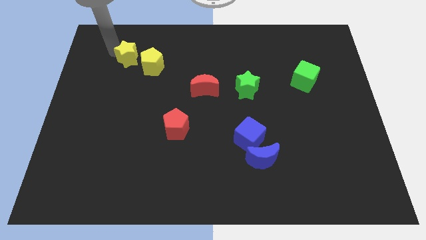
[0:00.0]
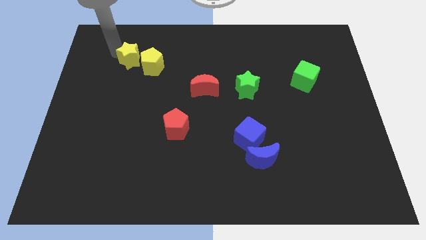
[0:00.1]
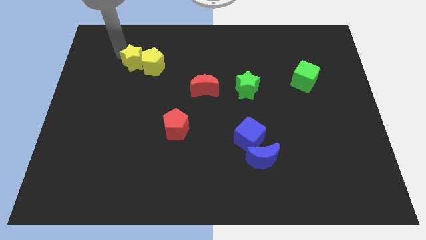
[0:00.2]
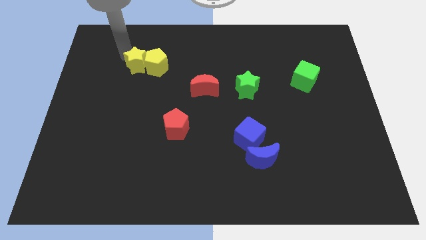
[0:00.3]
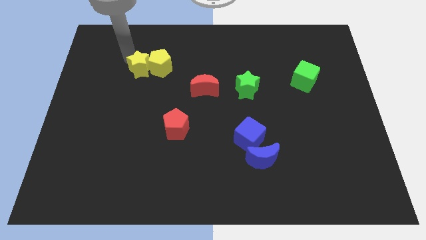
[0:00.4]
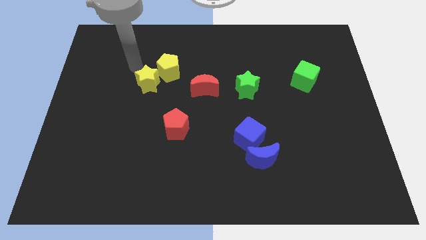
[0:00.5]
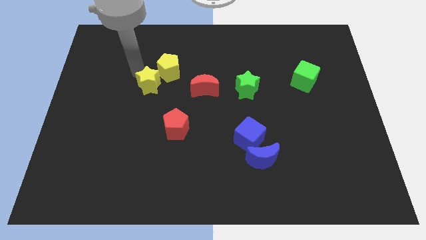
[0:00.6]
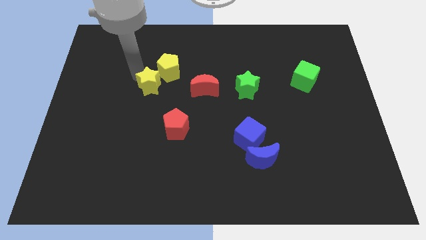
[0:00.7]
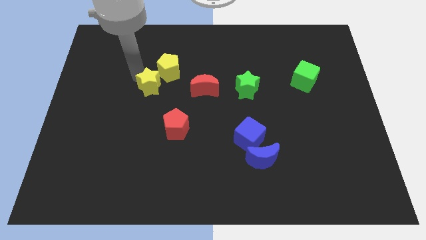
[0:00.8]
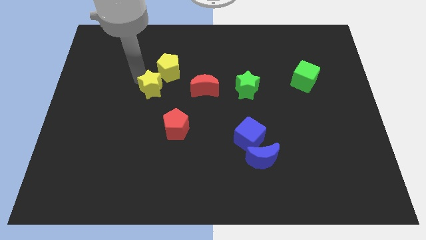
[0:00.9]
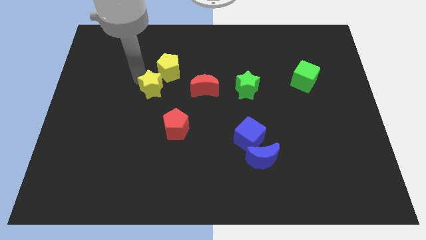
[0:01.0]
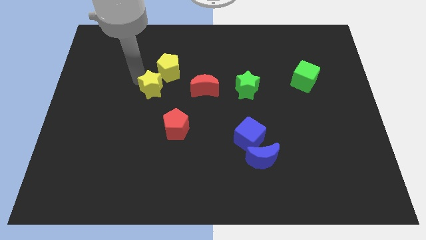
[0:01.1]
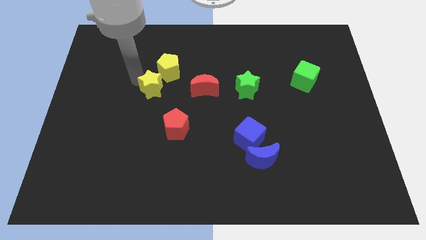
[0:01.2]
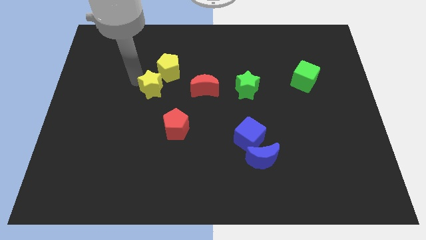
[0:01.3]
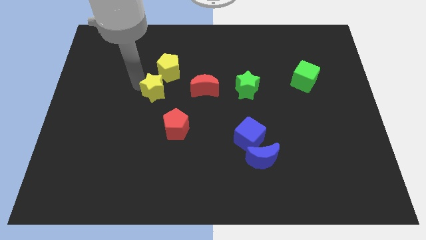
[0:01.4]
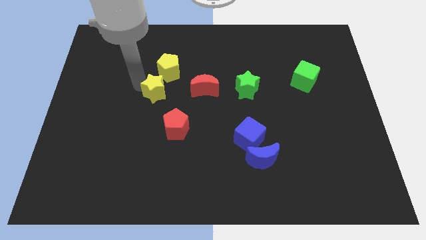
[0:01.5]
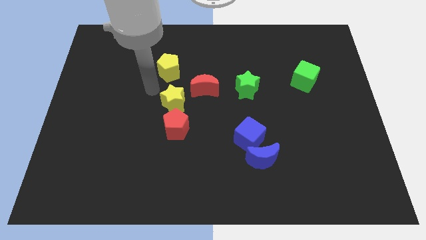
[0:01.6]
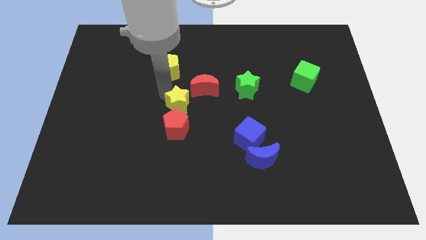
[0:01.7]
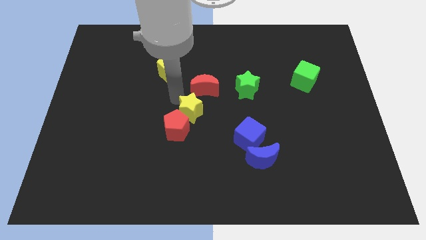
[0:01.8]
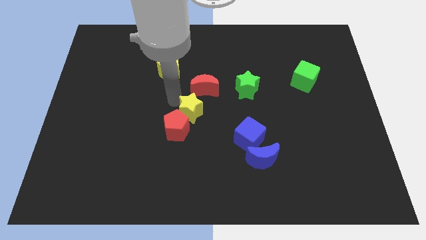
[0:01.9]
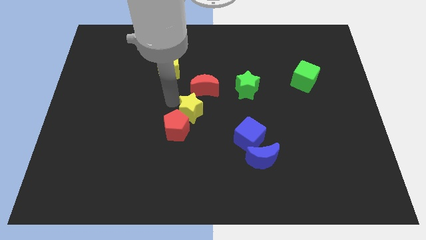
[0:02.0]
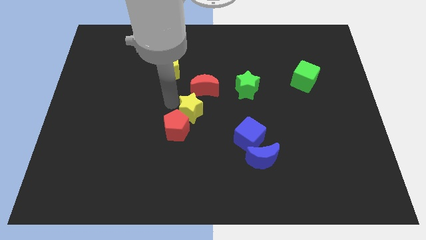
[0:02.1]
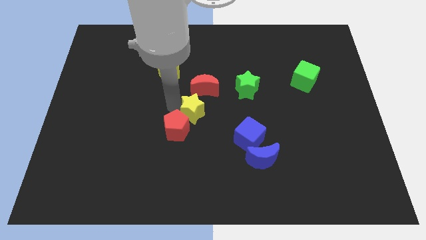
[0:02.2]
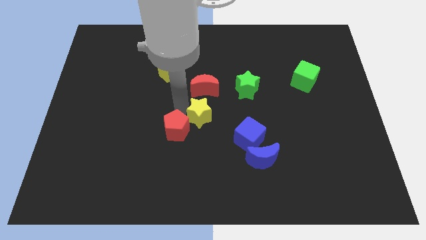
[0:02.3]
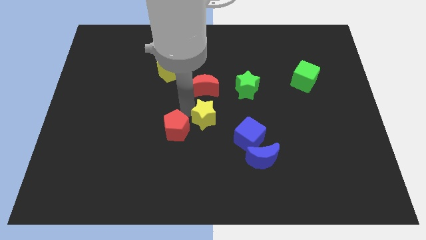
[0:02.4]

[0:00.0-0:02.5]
move the yellow star to the bottom of the red crescent

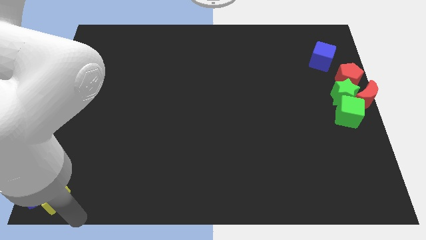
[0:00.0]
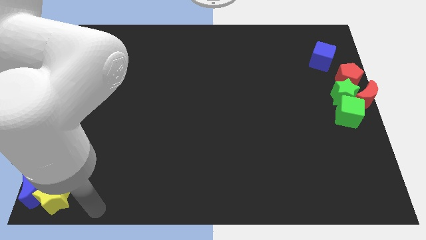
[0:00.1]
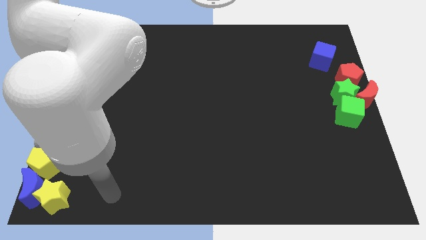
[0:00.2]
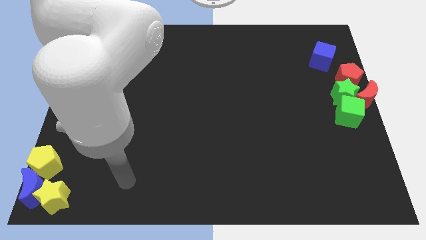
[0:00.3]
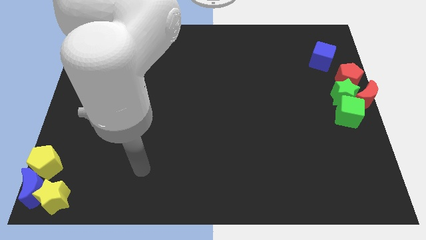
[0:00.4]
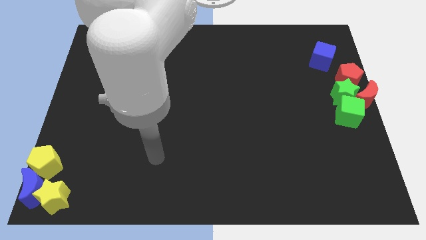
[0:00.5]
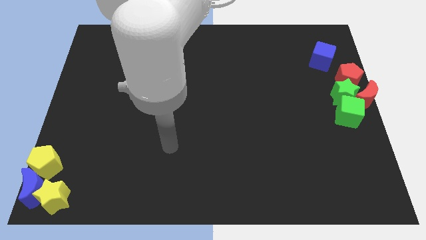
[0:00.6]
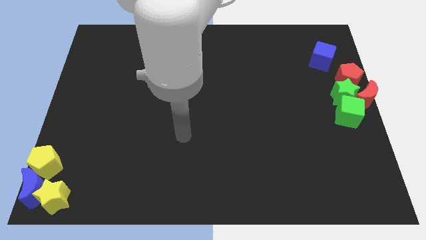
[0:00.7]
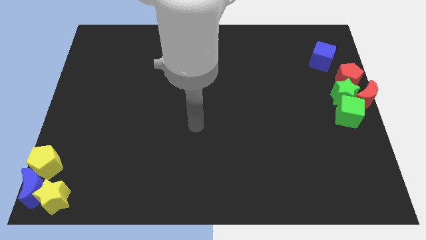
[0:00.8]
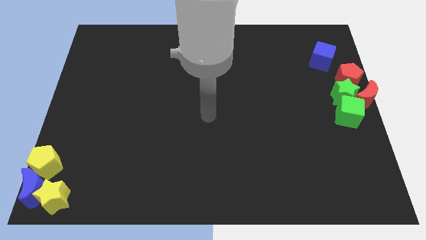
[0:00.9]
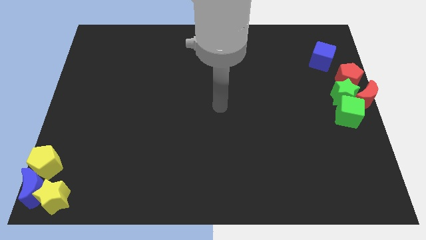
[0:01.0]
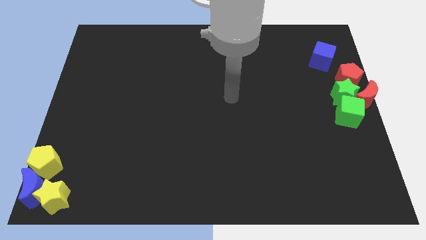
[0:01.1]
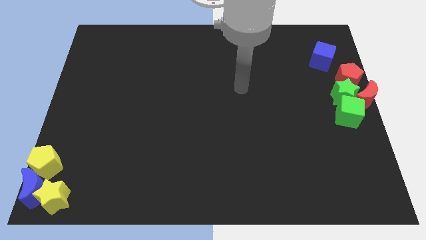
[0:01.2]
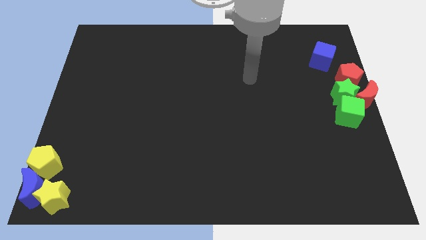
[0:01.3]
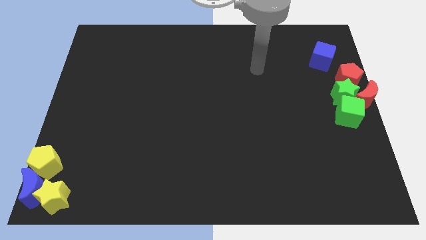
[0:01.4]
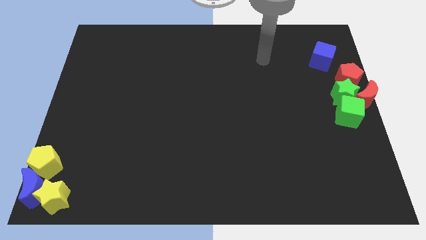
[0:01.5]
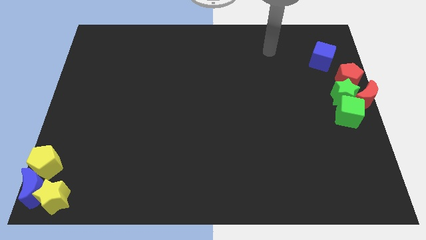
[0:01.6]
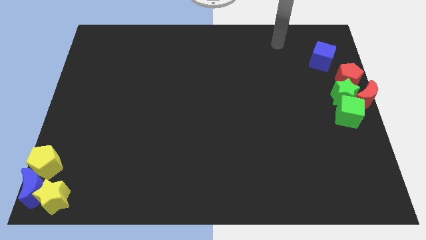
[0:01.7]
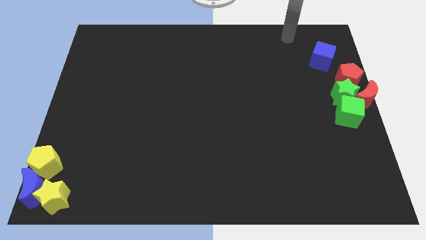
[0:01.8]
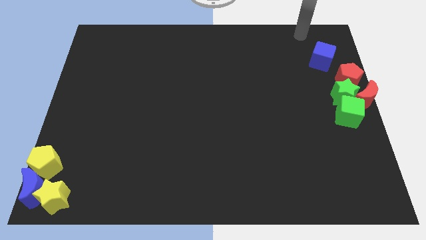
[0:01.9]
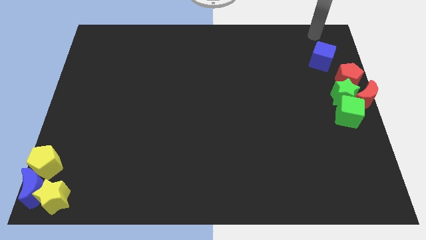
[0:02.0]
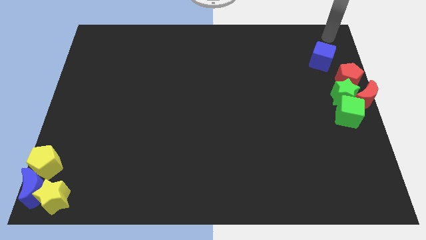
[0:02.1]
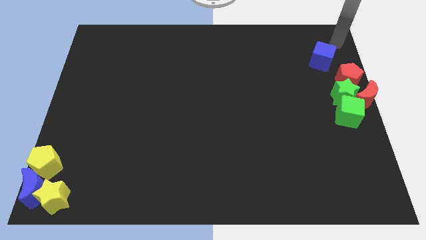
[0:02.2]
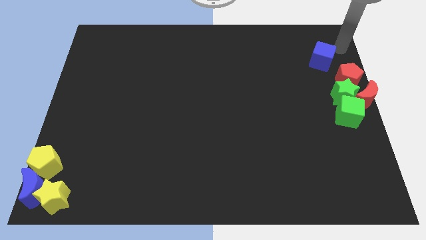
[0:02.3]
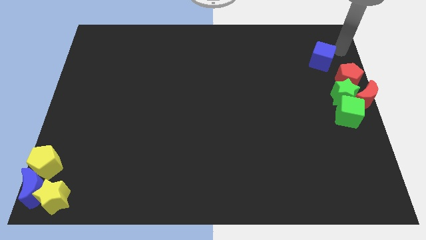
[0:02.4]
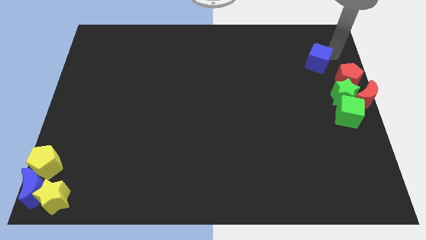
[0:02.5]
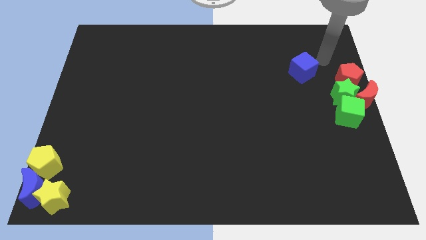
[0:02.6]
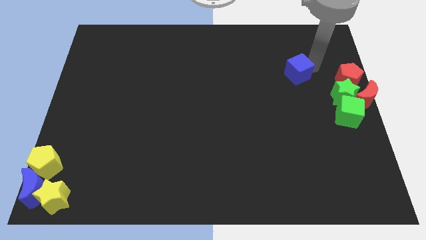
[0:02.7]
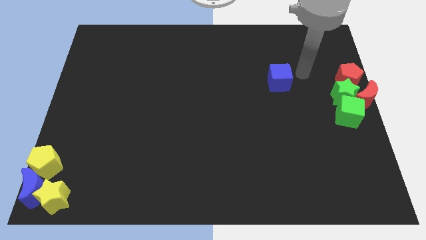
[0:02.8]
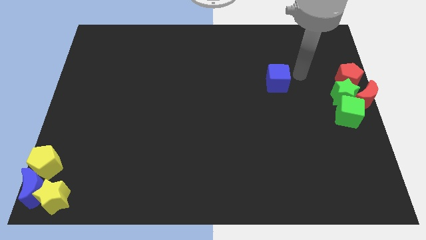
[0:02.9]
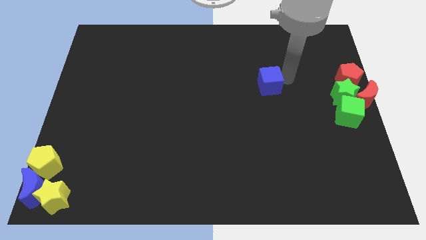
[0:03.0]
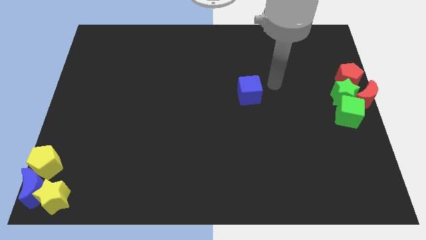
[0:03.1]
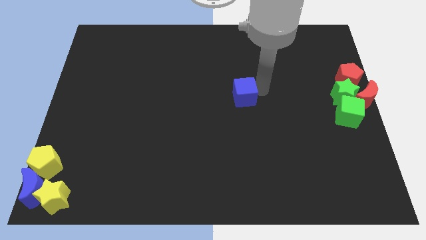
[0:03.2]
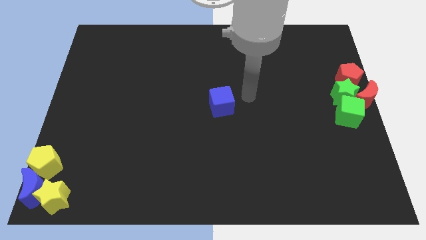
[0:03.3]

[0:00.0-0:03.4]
move the blue cube to the center of the board

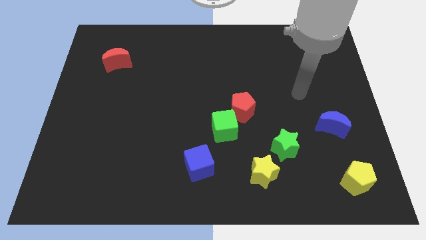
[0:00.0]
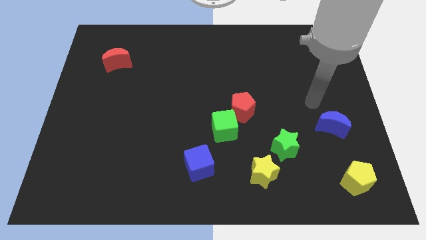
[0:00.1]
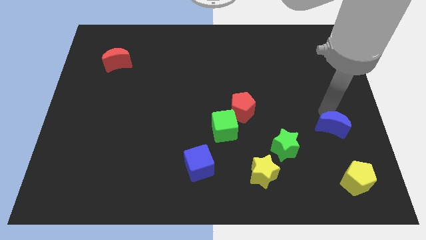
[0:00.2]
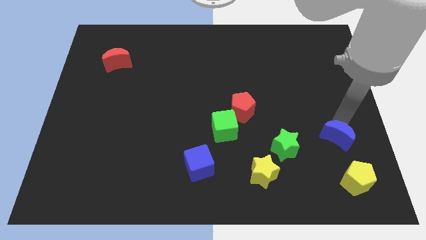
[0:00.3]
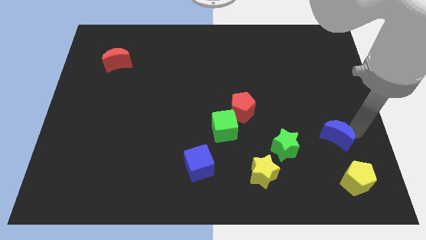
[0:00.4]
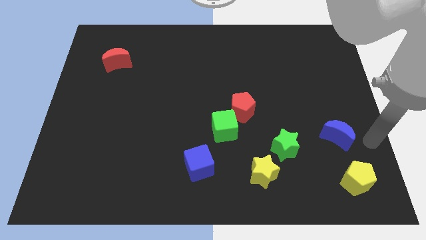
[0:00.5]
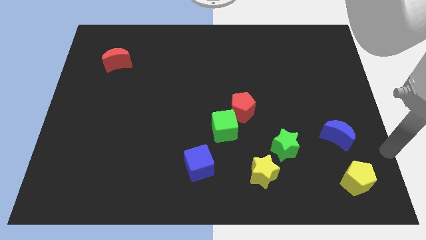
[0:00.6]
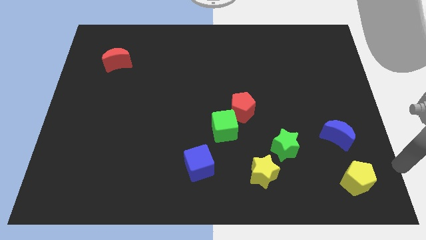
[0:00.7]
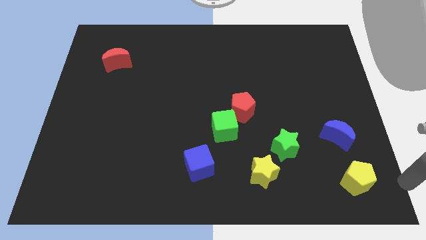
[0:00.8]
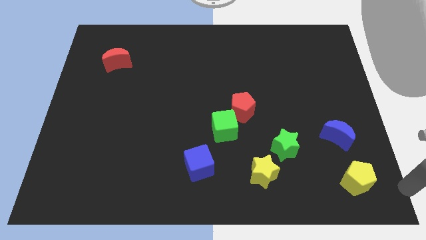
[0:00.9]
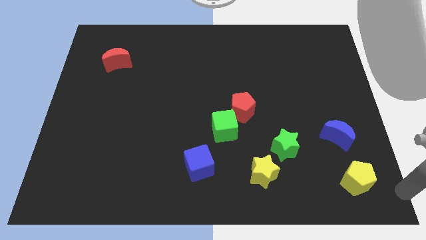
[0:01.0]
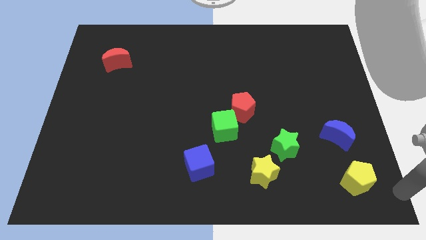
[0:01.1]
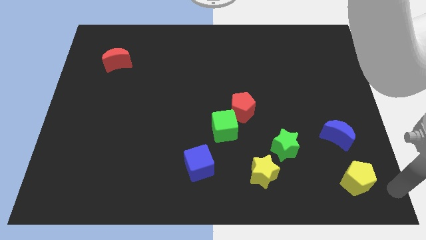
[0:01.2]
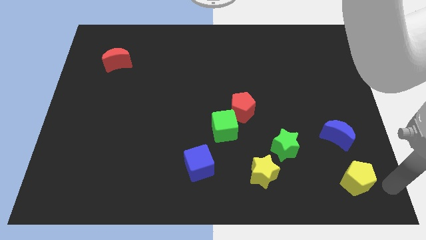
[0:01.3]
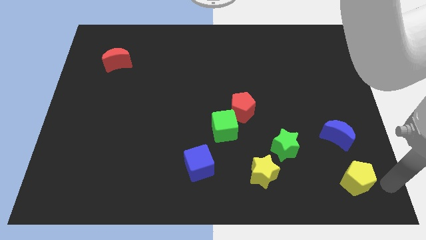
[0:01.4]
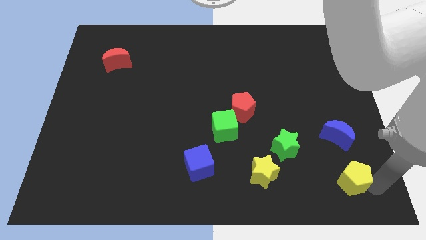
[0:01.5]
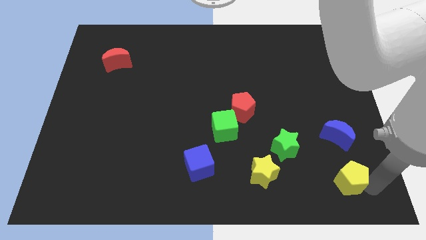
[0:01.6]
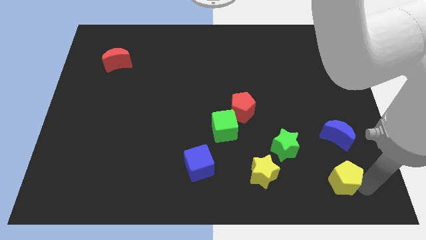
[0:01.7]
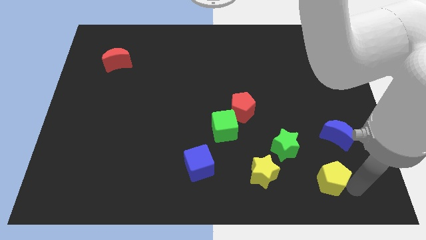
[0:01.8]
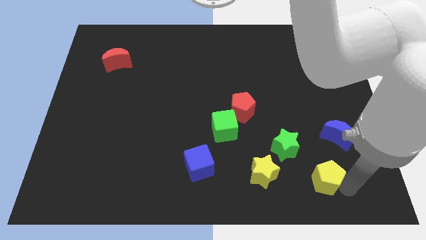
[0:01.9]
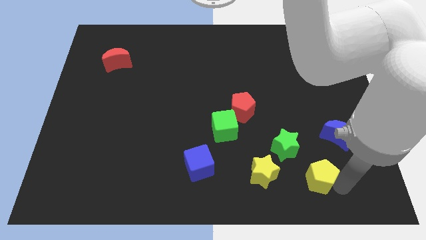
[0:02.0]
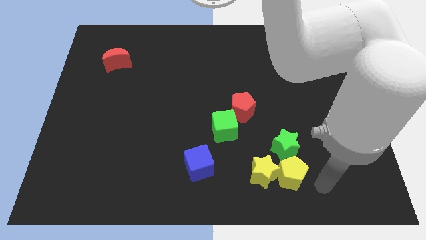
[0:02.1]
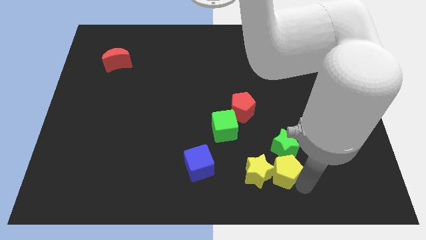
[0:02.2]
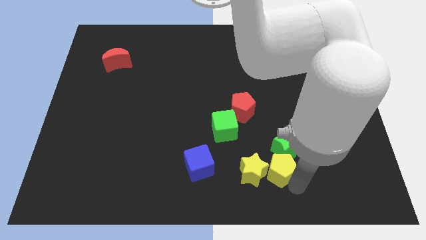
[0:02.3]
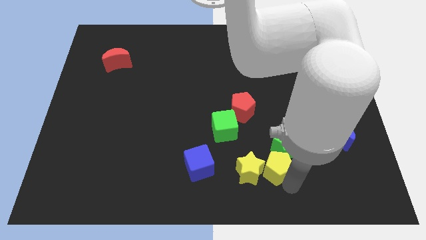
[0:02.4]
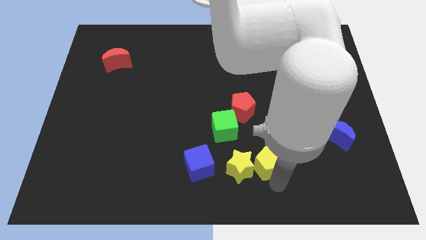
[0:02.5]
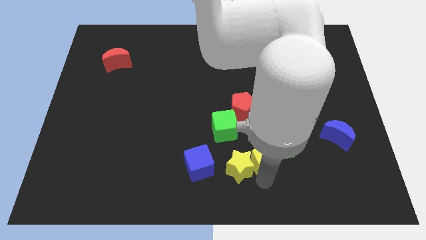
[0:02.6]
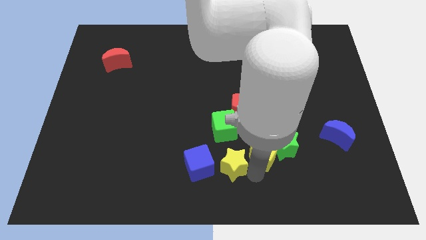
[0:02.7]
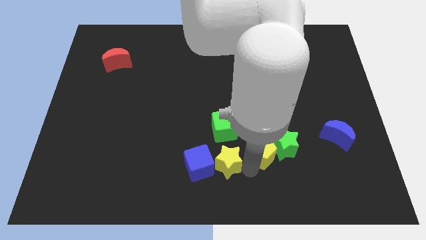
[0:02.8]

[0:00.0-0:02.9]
push the yellow pentagon into the yellow star
